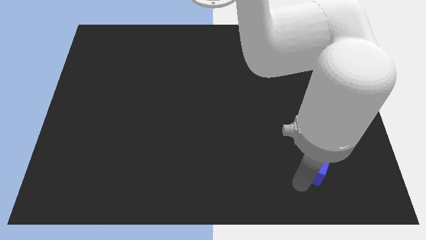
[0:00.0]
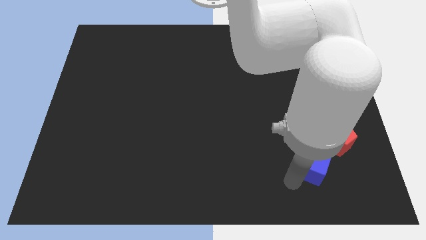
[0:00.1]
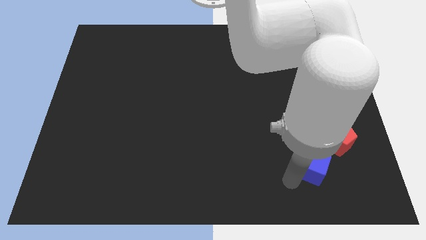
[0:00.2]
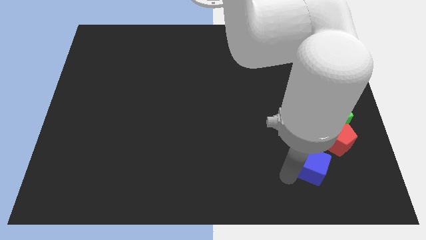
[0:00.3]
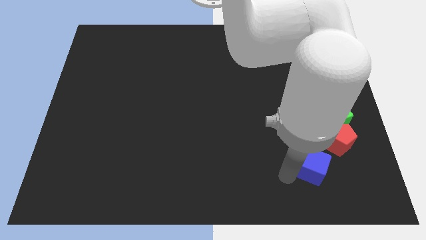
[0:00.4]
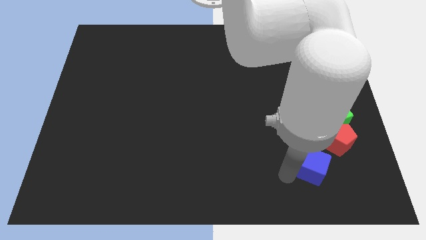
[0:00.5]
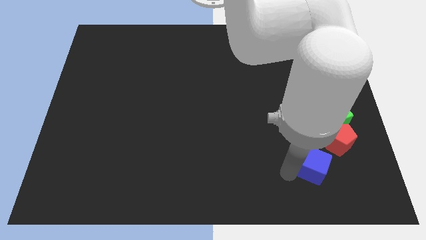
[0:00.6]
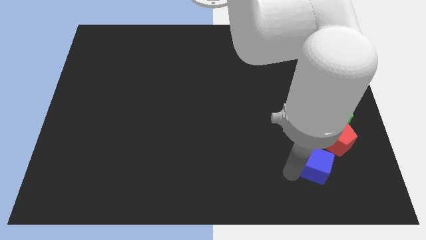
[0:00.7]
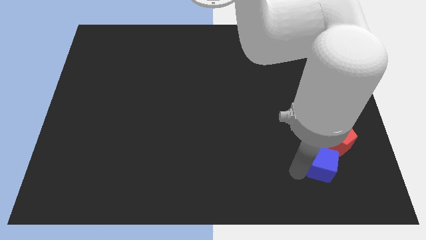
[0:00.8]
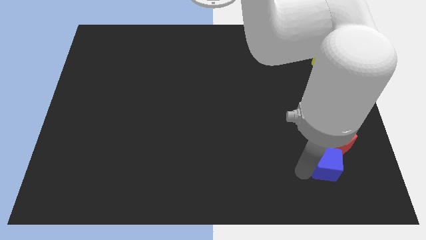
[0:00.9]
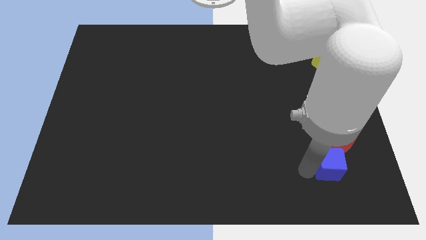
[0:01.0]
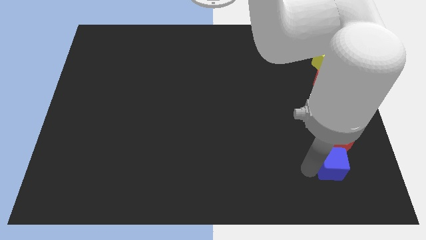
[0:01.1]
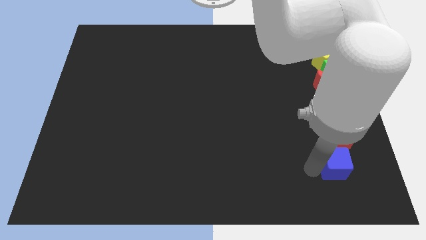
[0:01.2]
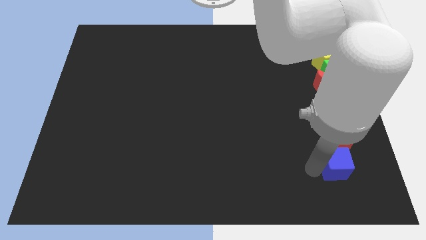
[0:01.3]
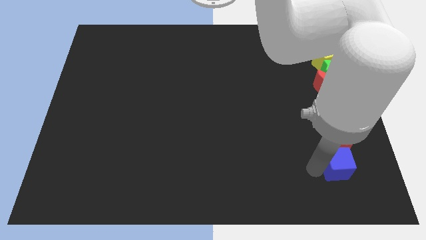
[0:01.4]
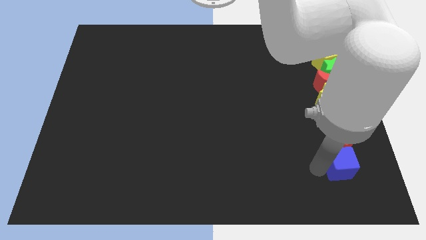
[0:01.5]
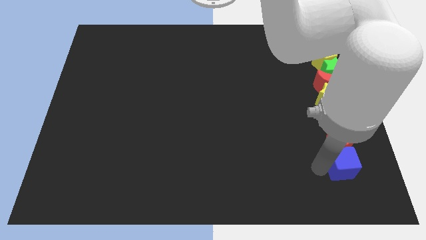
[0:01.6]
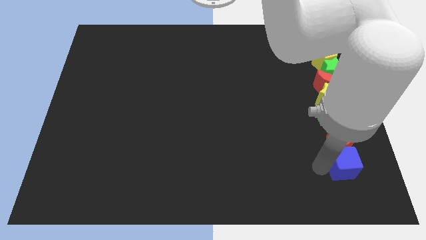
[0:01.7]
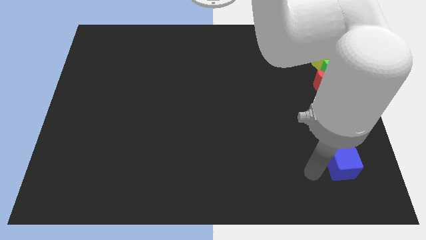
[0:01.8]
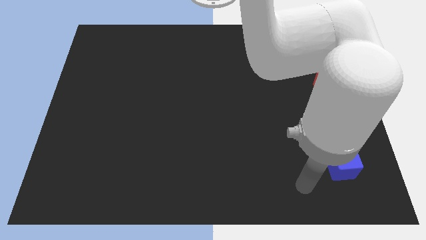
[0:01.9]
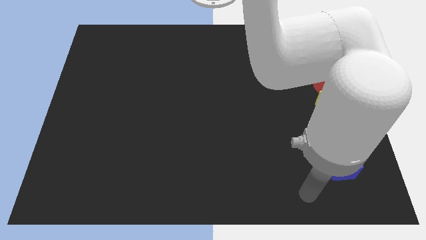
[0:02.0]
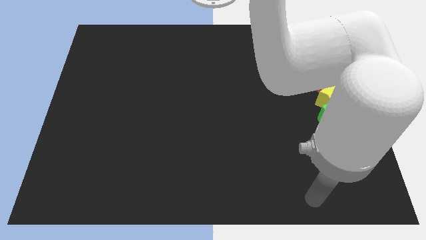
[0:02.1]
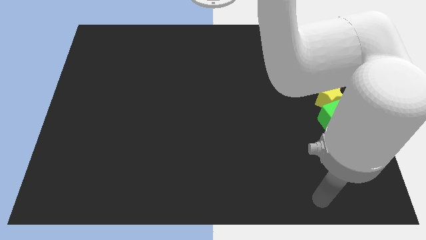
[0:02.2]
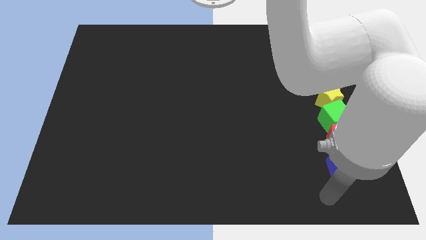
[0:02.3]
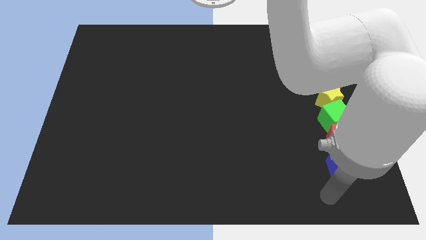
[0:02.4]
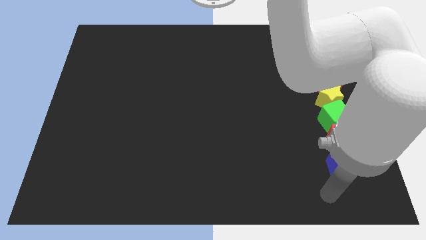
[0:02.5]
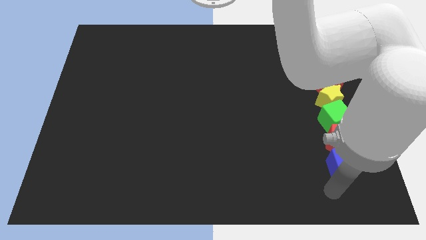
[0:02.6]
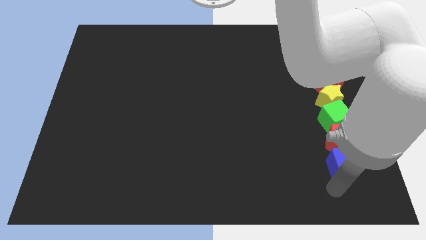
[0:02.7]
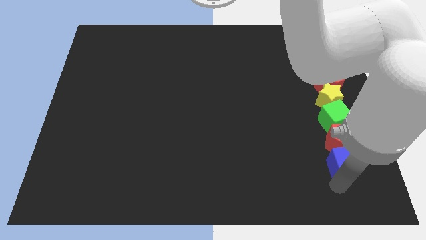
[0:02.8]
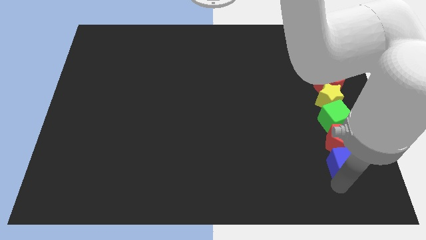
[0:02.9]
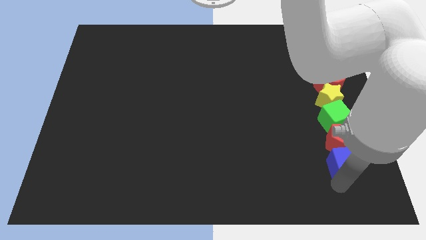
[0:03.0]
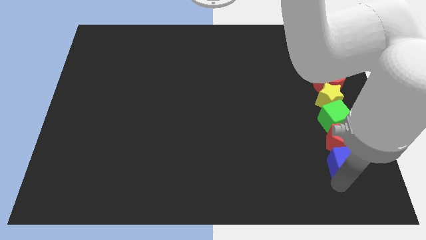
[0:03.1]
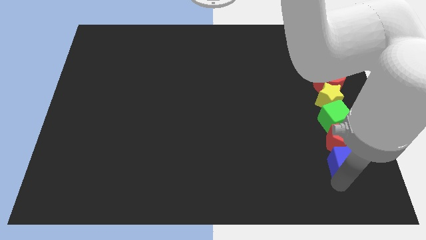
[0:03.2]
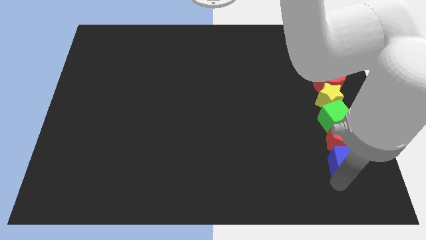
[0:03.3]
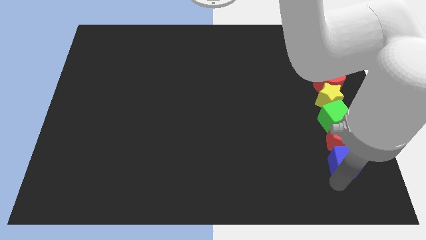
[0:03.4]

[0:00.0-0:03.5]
put the blue cube at the bottom side of the vertical line of blocks

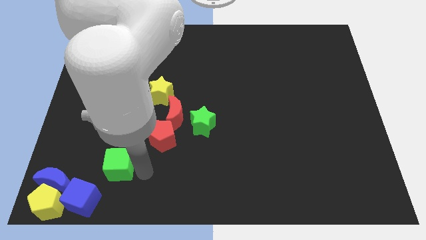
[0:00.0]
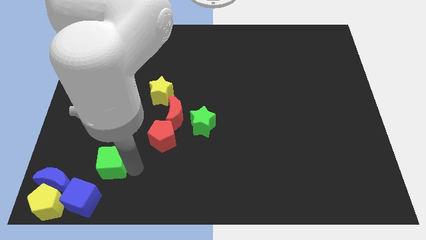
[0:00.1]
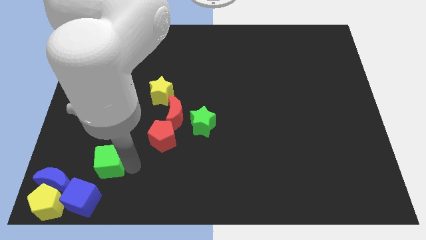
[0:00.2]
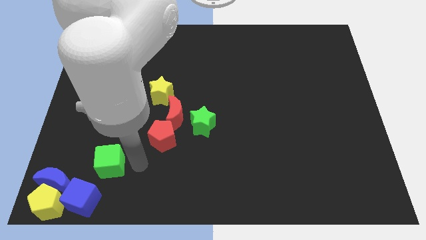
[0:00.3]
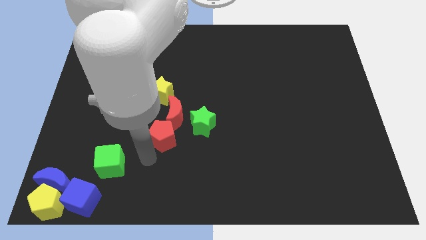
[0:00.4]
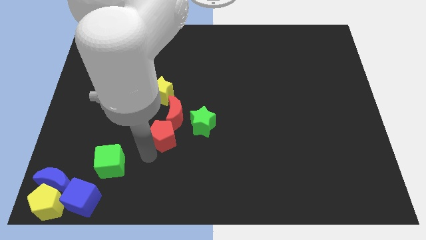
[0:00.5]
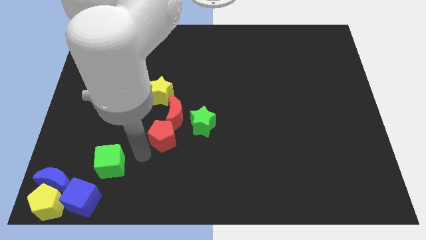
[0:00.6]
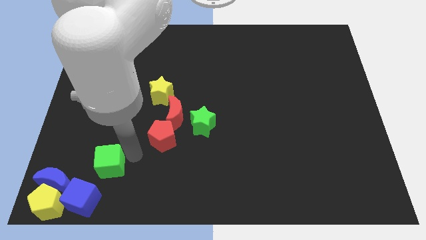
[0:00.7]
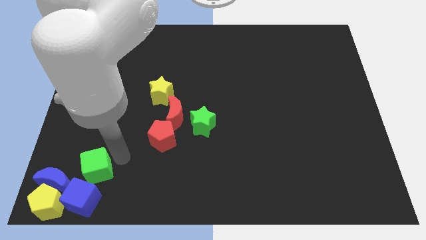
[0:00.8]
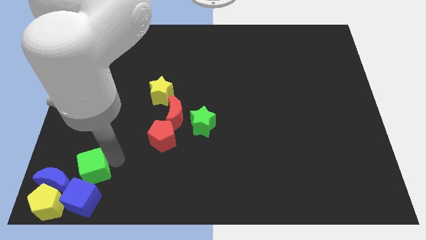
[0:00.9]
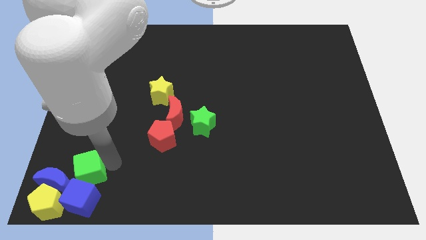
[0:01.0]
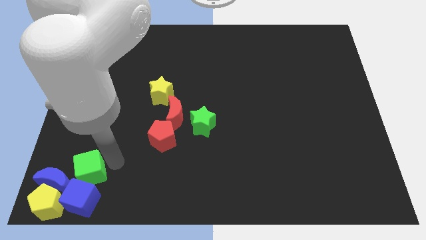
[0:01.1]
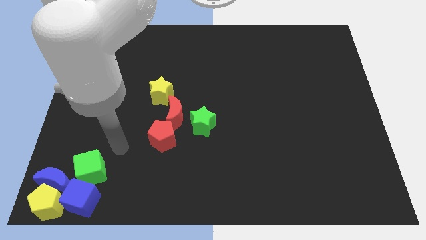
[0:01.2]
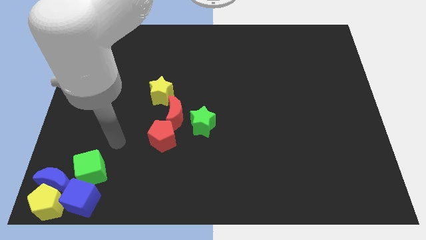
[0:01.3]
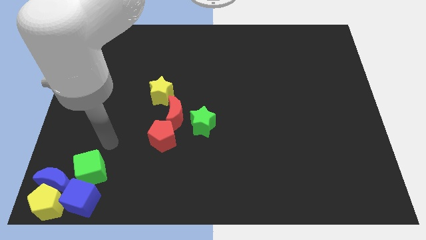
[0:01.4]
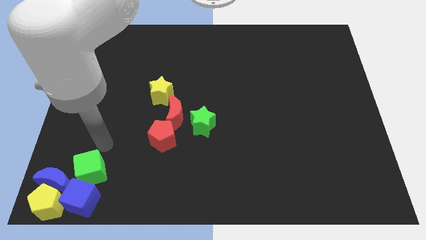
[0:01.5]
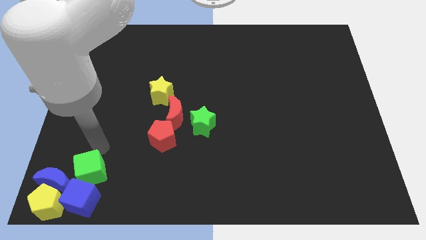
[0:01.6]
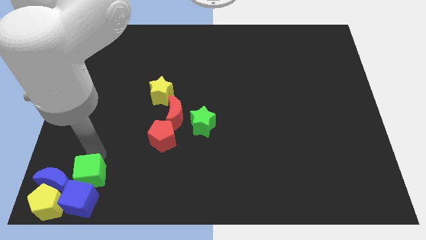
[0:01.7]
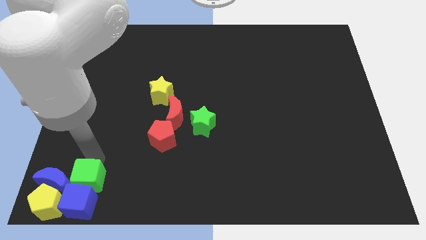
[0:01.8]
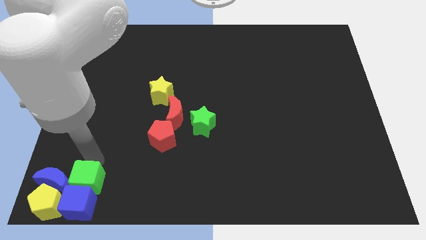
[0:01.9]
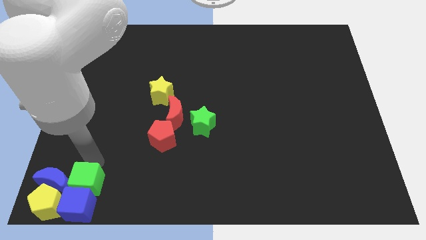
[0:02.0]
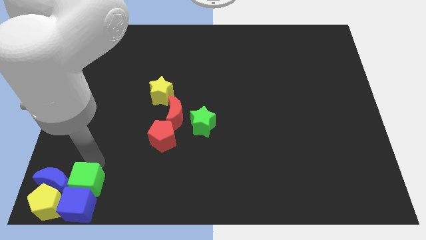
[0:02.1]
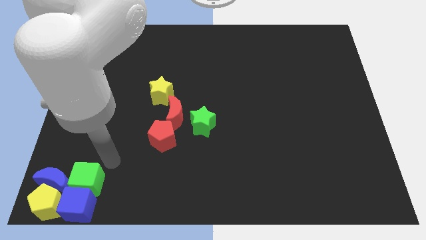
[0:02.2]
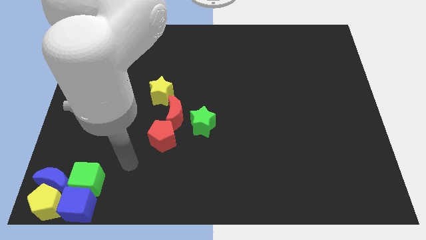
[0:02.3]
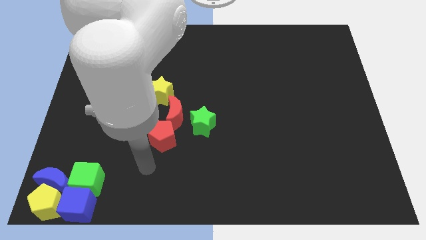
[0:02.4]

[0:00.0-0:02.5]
place green cube to the top of the blue cube

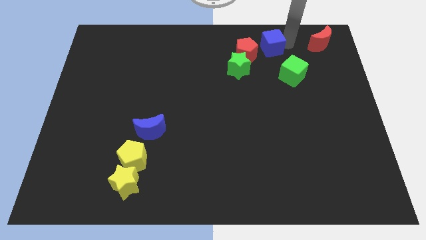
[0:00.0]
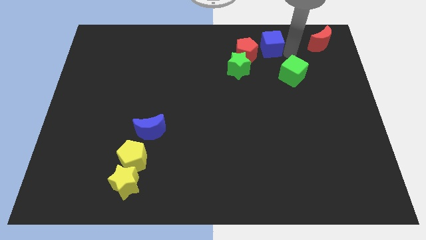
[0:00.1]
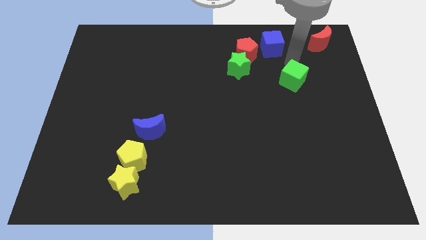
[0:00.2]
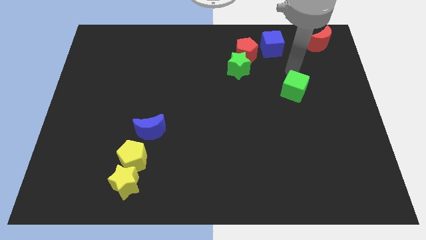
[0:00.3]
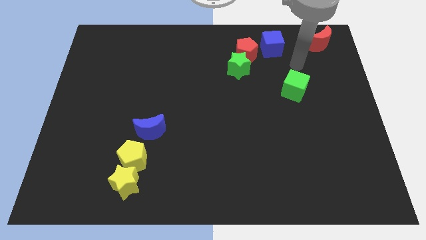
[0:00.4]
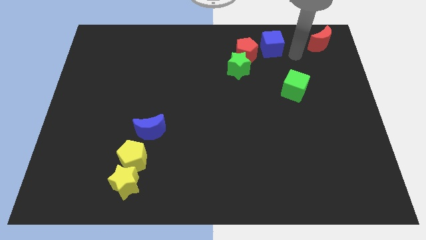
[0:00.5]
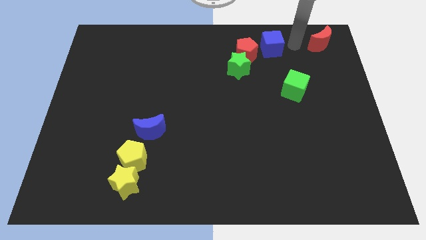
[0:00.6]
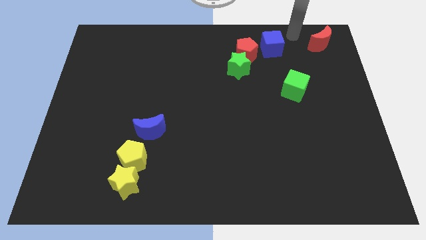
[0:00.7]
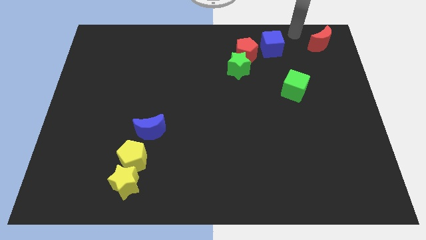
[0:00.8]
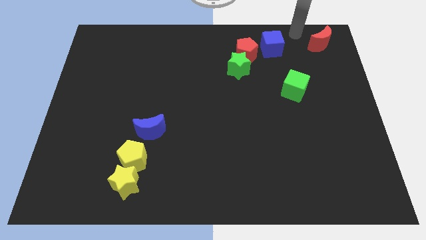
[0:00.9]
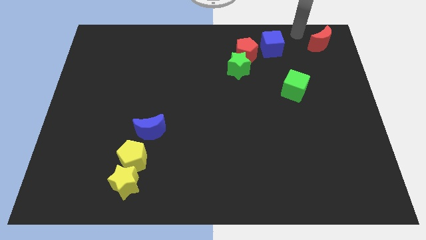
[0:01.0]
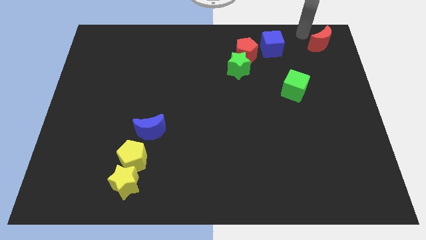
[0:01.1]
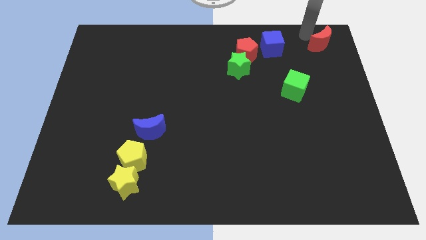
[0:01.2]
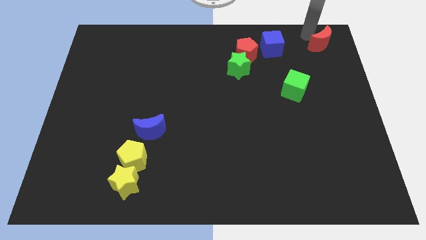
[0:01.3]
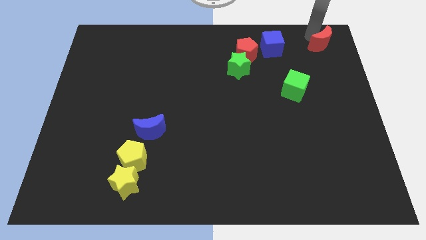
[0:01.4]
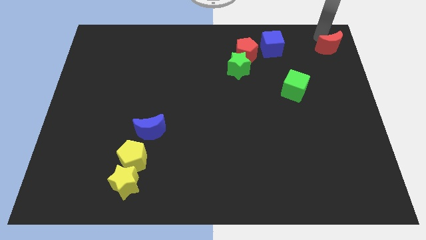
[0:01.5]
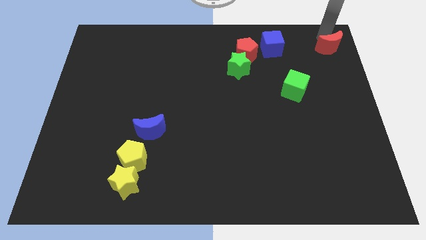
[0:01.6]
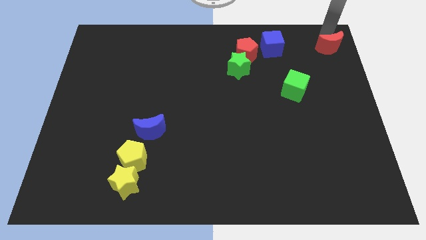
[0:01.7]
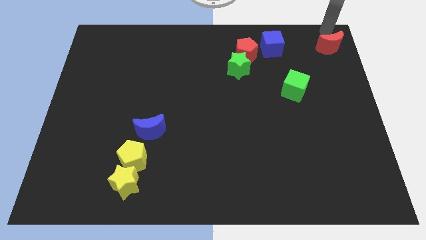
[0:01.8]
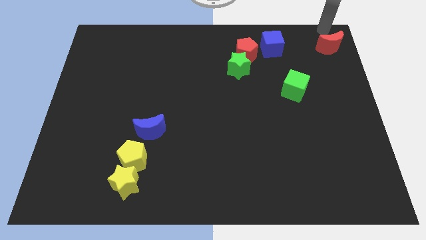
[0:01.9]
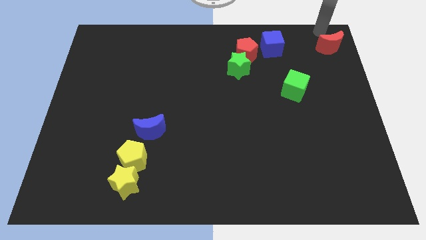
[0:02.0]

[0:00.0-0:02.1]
move the red moon at the top right corner

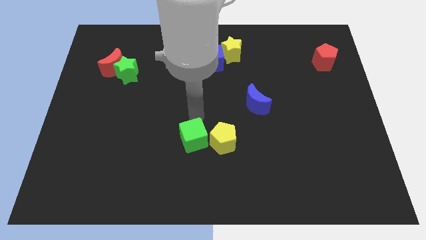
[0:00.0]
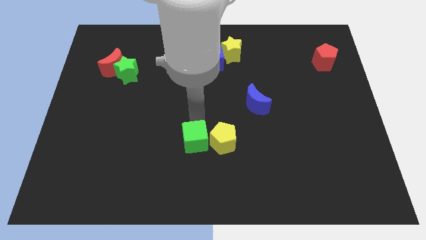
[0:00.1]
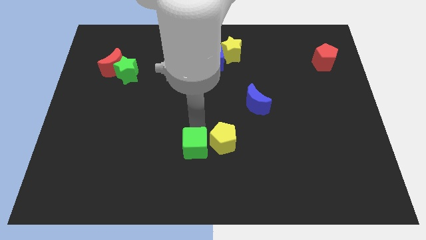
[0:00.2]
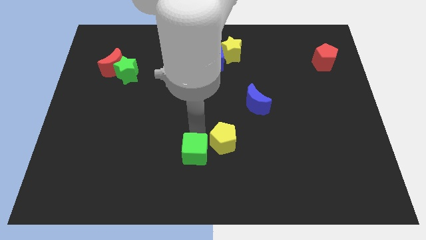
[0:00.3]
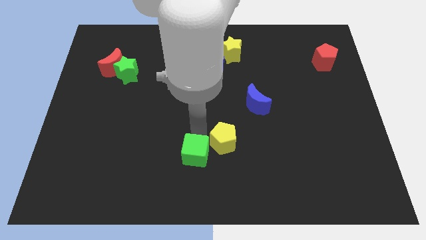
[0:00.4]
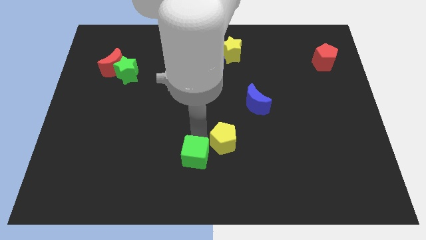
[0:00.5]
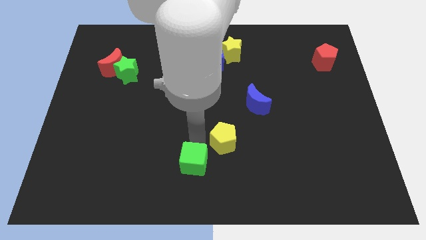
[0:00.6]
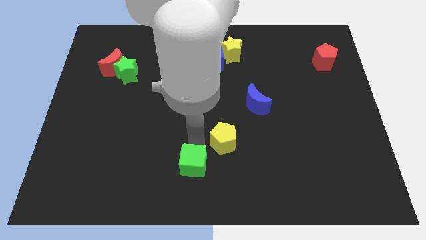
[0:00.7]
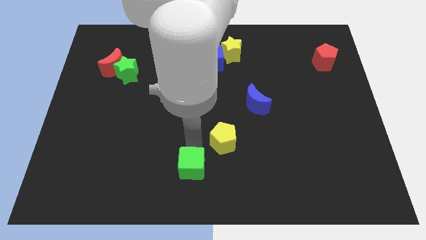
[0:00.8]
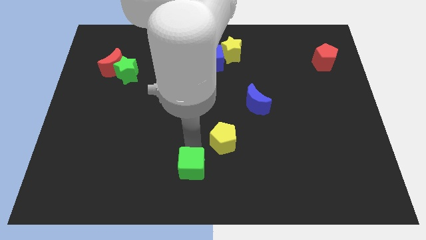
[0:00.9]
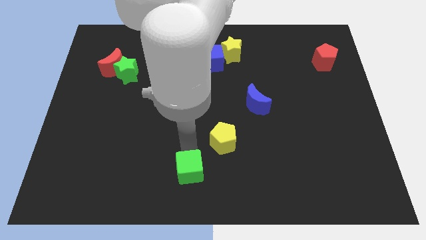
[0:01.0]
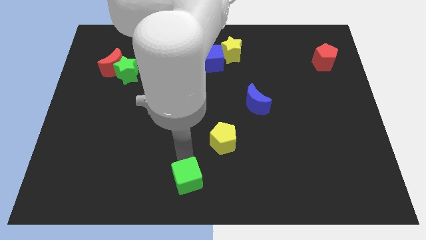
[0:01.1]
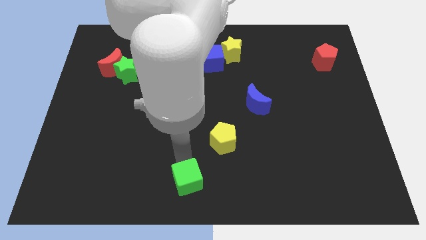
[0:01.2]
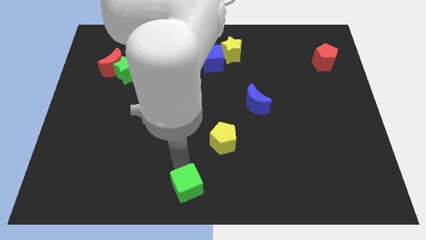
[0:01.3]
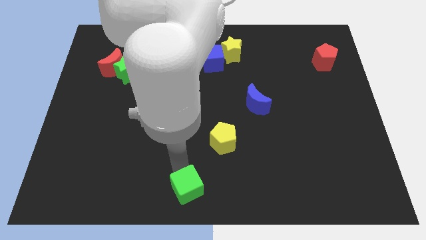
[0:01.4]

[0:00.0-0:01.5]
push the green cube to the bottom left of the yellow pentagon
